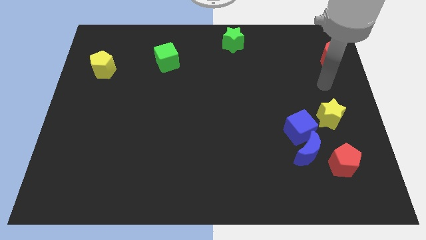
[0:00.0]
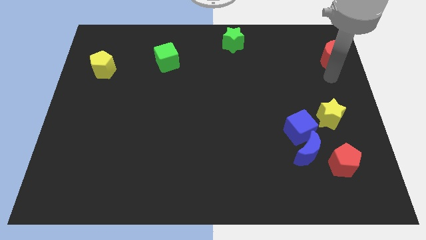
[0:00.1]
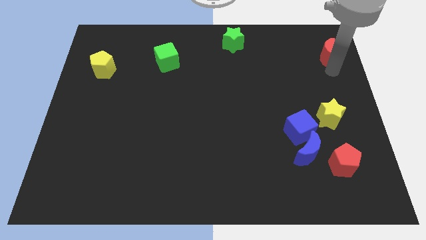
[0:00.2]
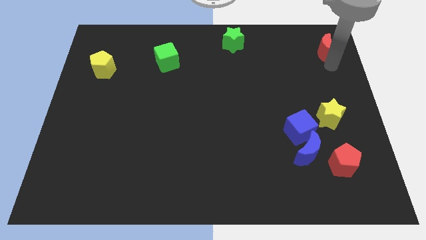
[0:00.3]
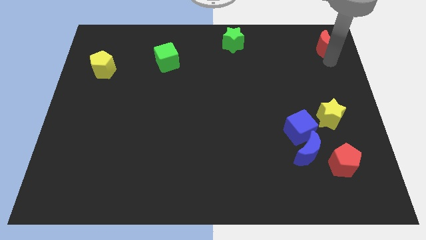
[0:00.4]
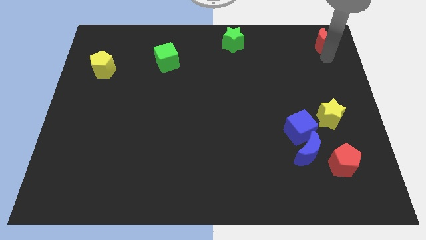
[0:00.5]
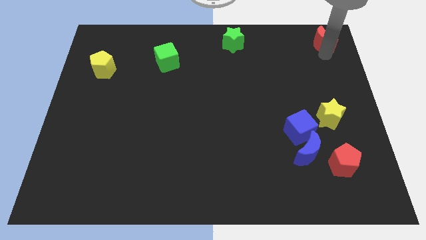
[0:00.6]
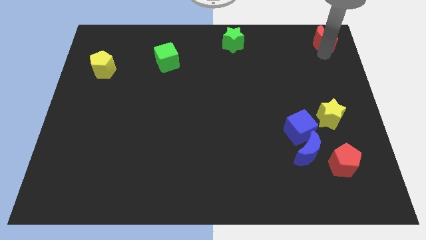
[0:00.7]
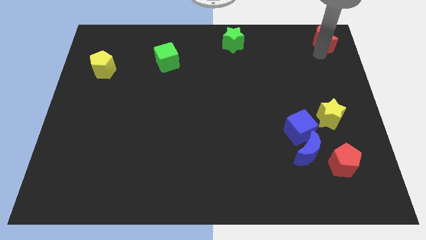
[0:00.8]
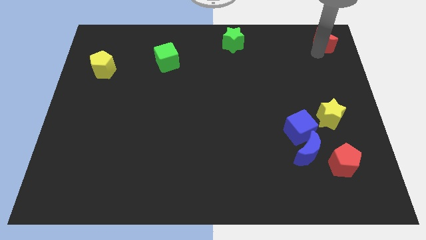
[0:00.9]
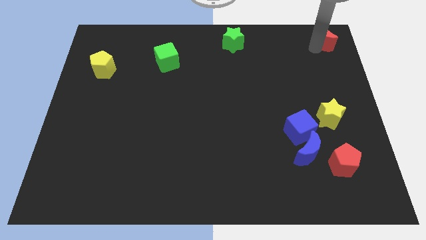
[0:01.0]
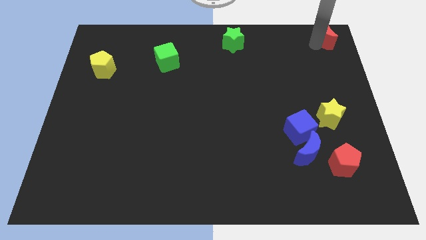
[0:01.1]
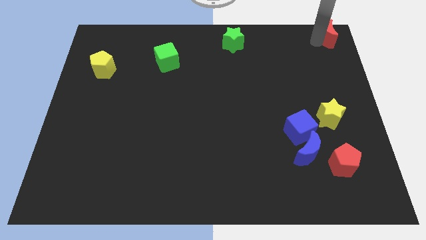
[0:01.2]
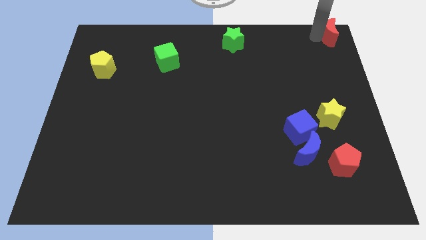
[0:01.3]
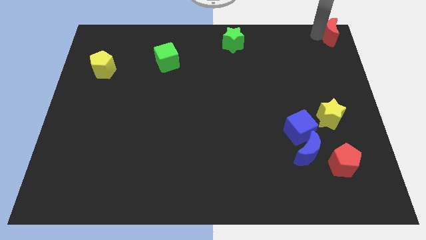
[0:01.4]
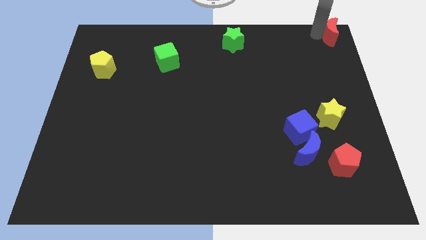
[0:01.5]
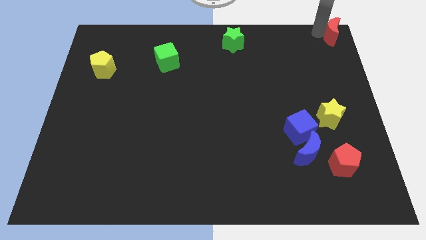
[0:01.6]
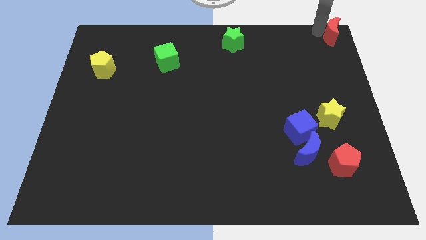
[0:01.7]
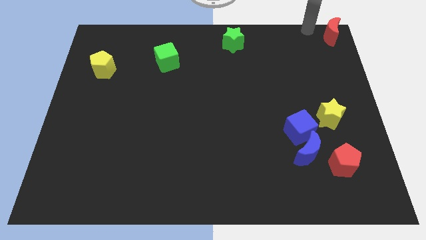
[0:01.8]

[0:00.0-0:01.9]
push the red crescent to the top right corner of the board

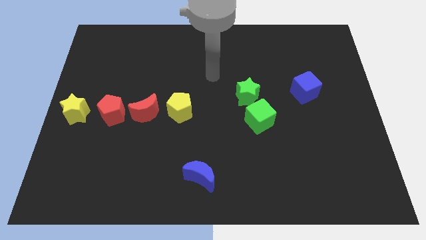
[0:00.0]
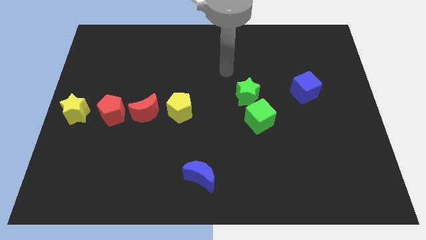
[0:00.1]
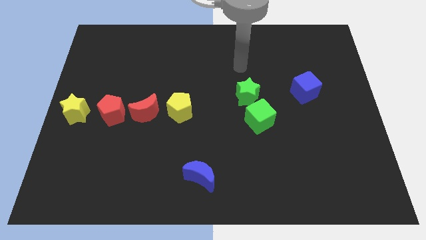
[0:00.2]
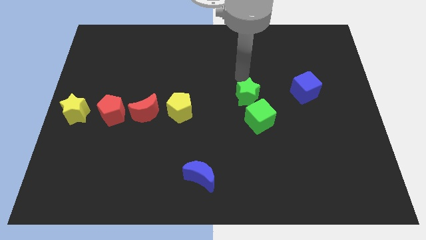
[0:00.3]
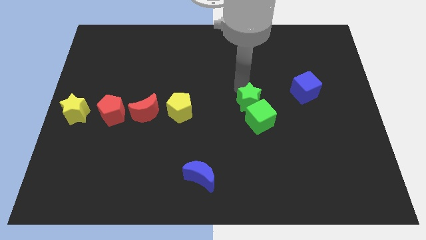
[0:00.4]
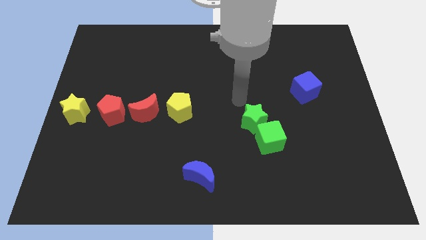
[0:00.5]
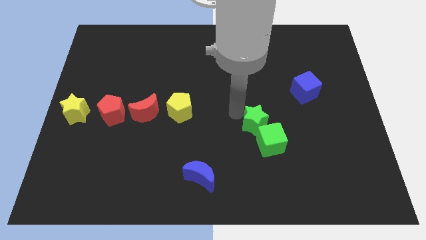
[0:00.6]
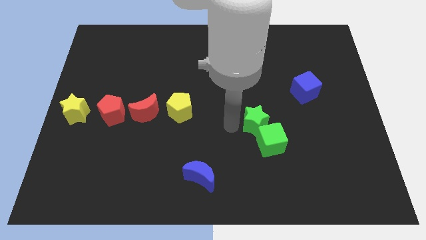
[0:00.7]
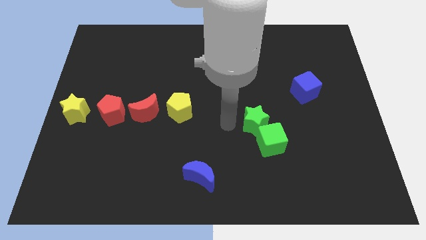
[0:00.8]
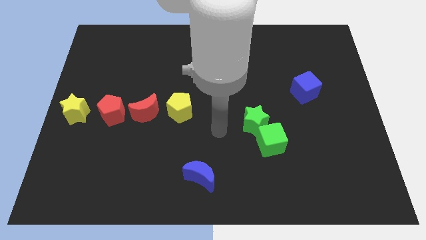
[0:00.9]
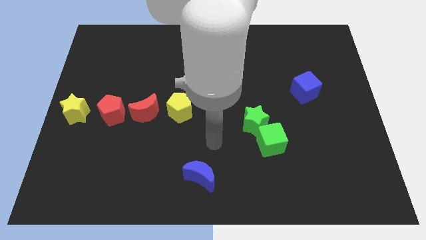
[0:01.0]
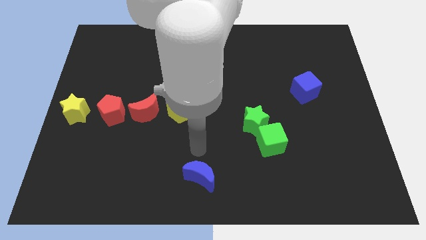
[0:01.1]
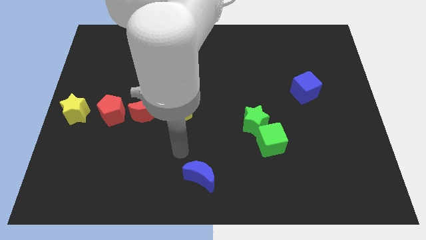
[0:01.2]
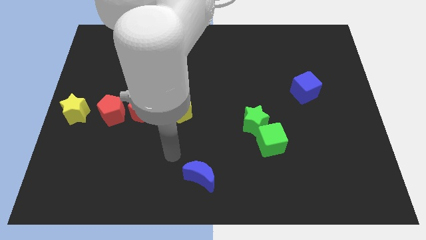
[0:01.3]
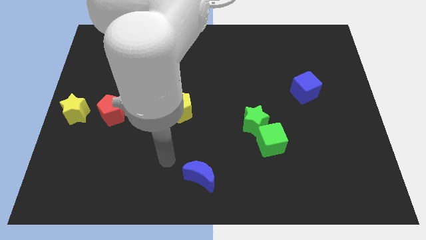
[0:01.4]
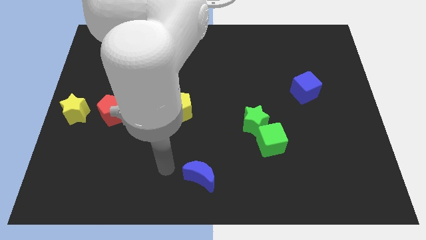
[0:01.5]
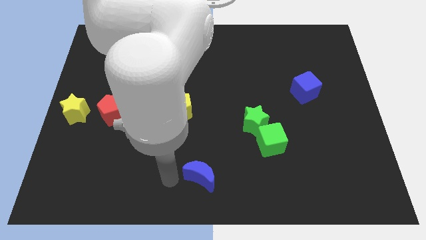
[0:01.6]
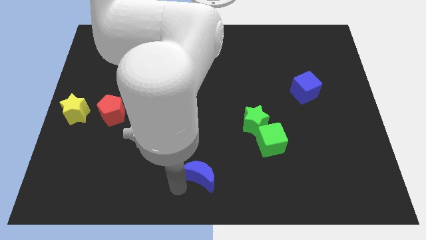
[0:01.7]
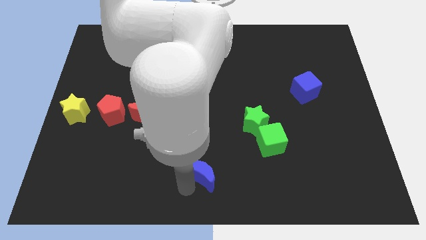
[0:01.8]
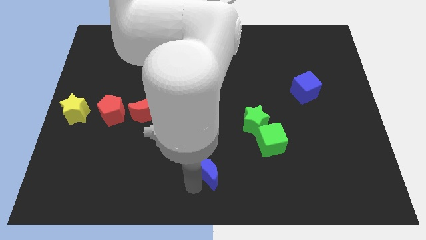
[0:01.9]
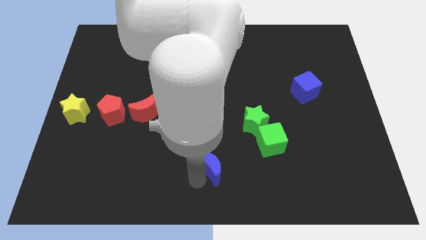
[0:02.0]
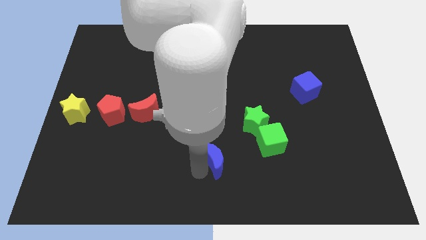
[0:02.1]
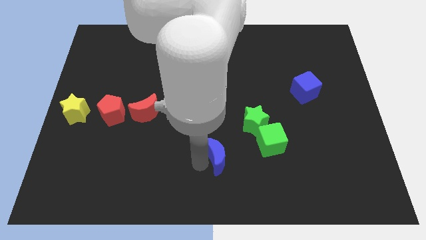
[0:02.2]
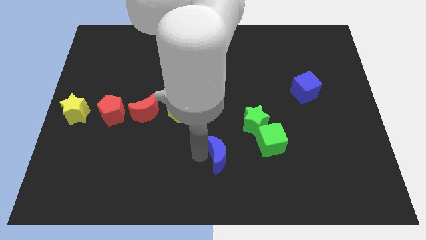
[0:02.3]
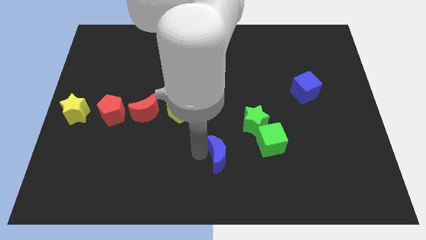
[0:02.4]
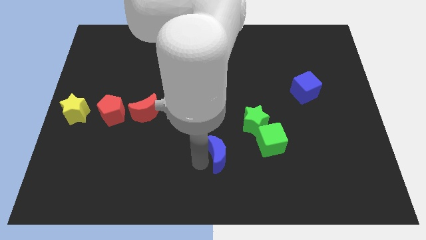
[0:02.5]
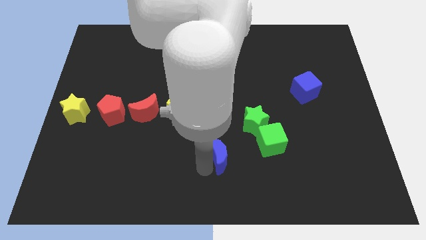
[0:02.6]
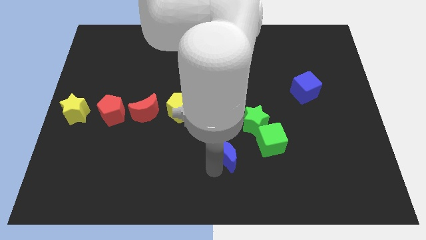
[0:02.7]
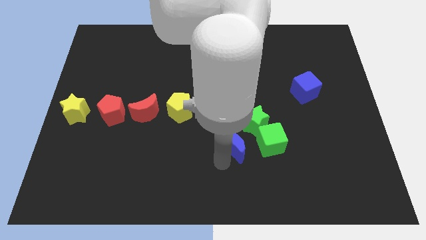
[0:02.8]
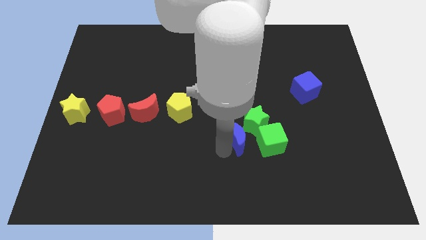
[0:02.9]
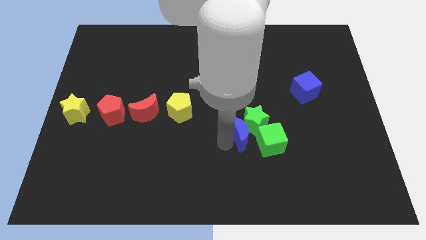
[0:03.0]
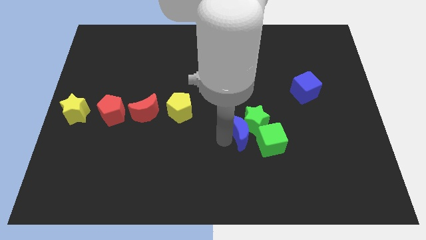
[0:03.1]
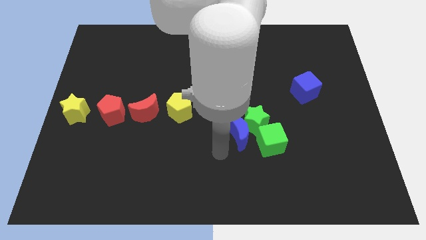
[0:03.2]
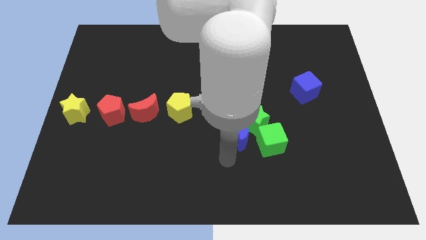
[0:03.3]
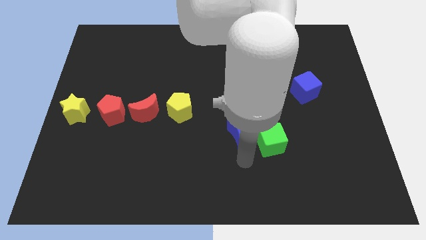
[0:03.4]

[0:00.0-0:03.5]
move the blue crescent into the left side of the green block

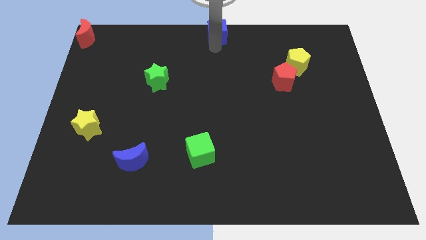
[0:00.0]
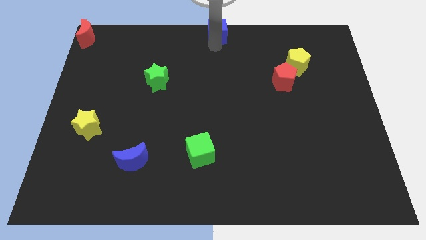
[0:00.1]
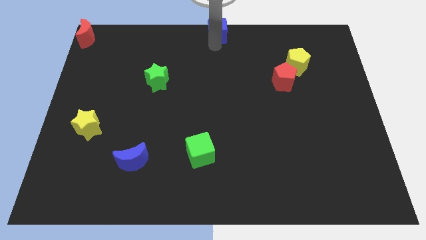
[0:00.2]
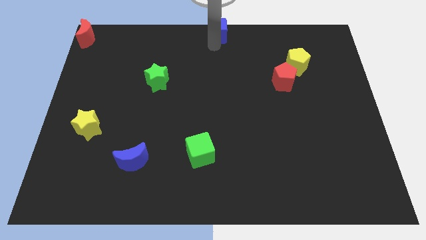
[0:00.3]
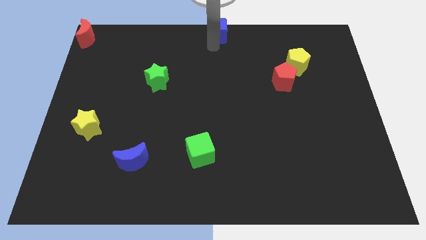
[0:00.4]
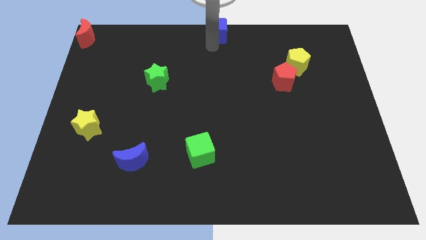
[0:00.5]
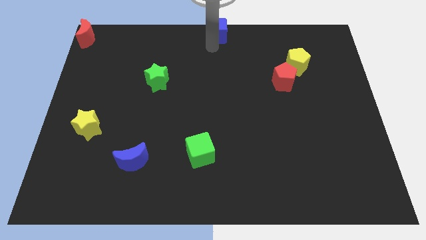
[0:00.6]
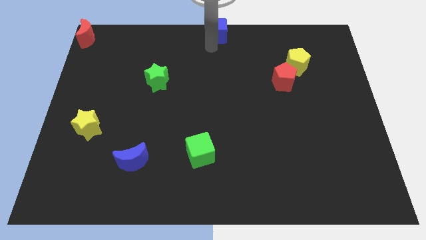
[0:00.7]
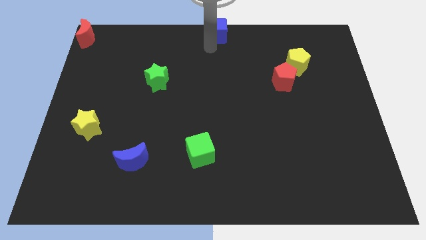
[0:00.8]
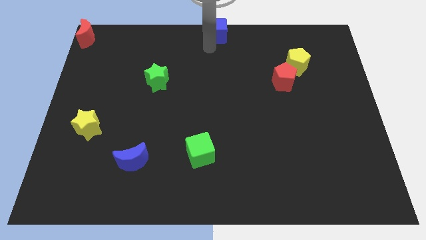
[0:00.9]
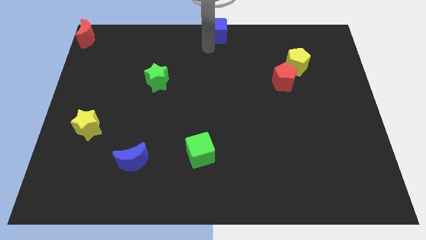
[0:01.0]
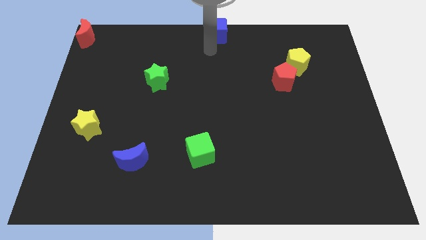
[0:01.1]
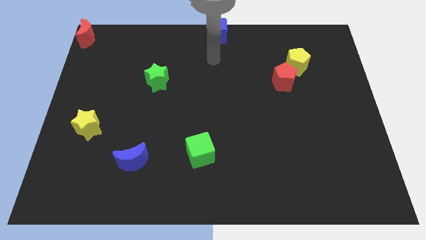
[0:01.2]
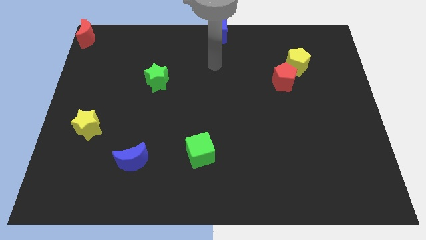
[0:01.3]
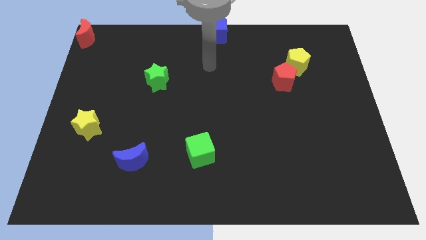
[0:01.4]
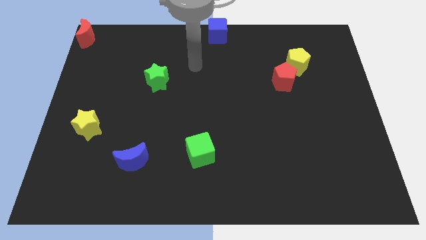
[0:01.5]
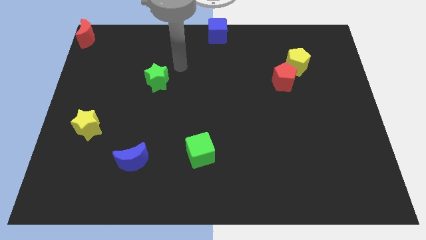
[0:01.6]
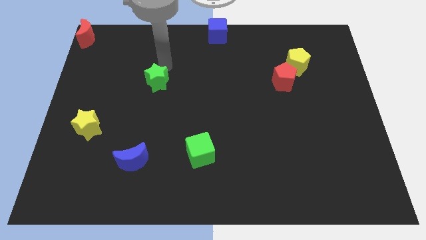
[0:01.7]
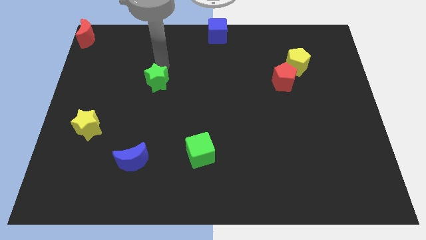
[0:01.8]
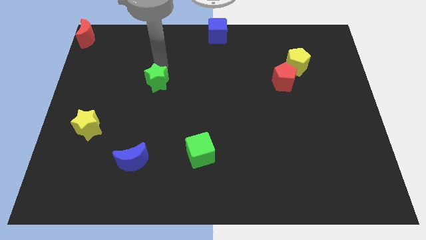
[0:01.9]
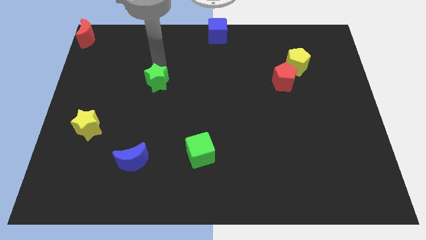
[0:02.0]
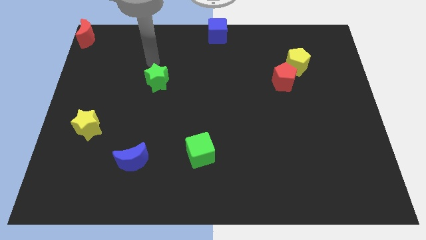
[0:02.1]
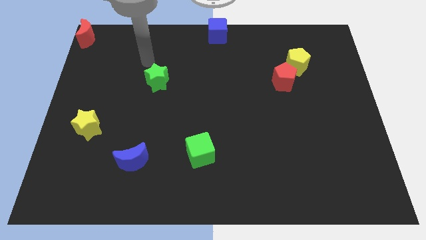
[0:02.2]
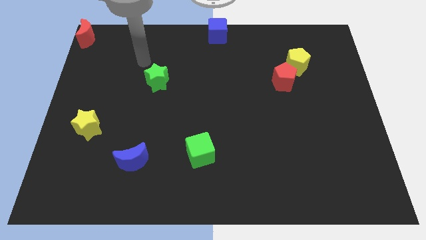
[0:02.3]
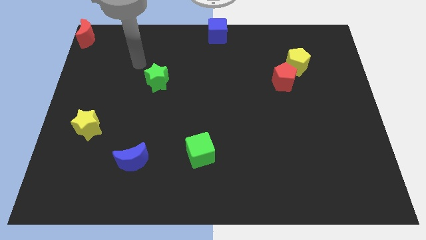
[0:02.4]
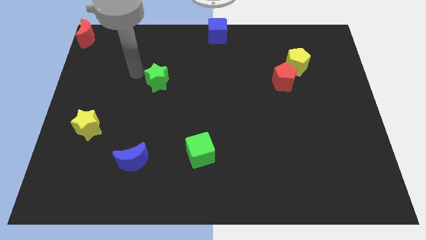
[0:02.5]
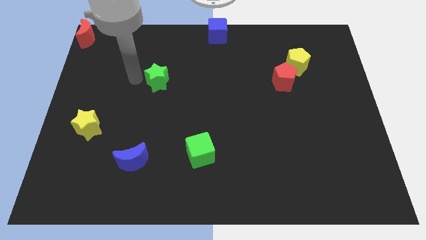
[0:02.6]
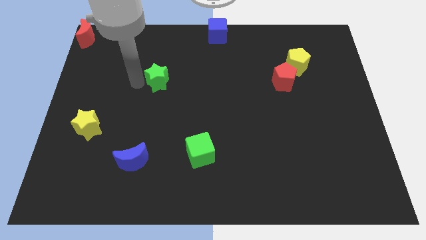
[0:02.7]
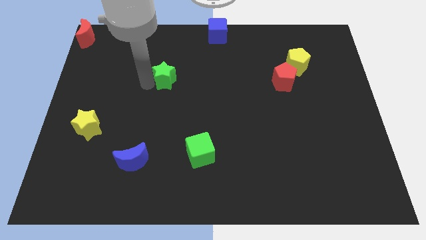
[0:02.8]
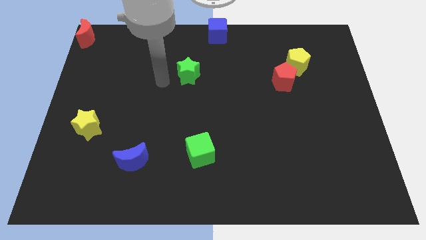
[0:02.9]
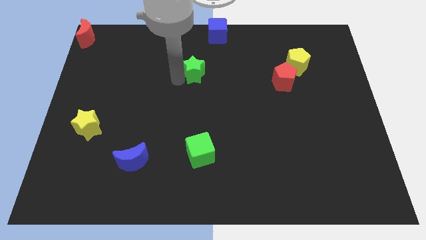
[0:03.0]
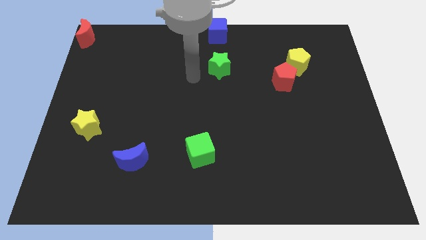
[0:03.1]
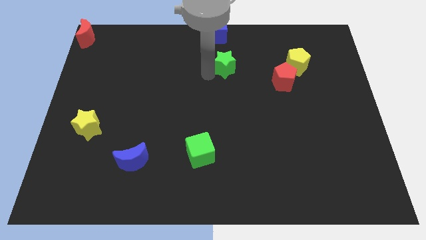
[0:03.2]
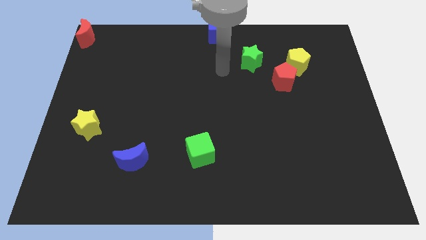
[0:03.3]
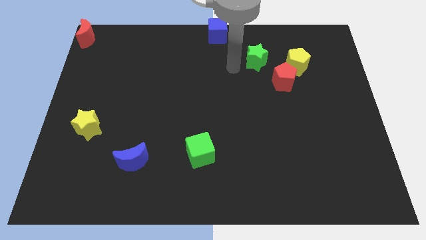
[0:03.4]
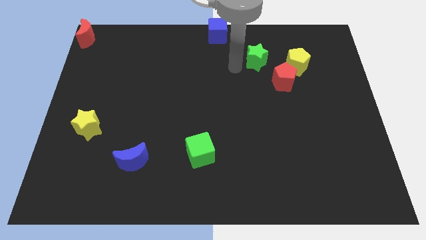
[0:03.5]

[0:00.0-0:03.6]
move the green star diagonal left of red pentagon
